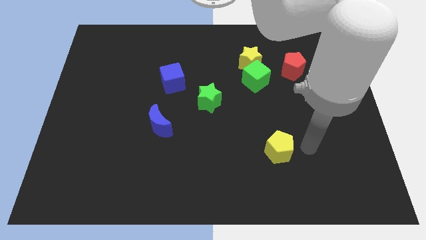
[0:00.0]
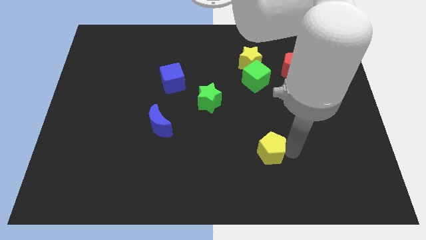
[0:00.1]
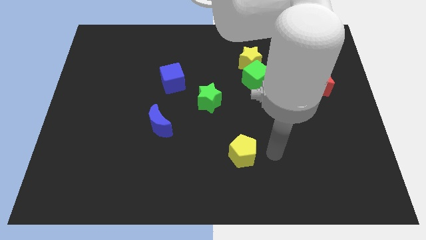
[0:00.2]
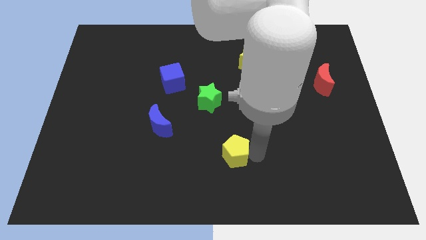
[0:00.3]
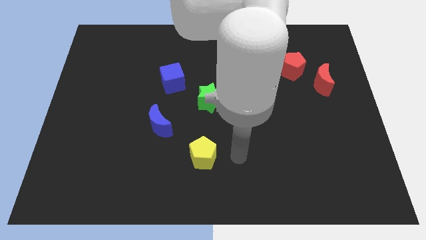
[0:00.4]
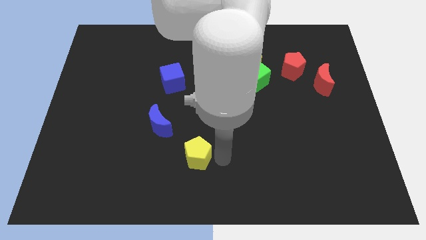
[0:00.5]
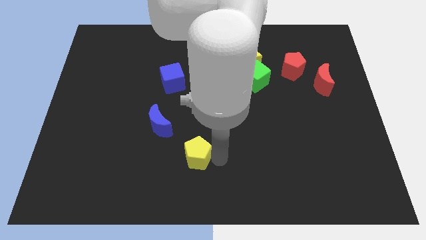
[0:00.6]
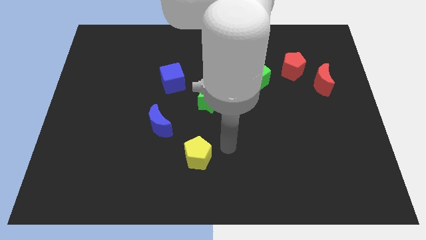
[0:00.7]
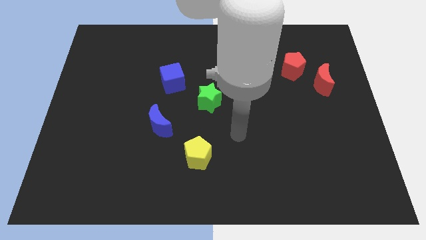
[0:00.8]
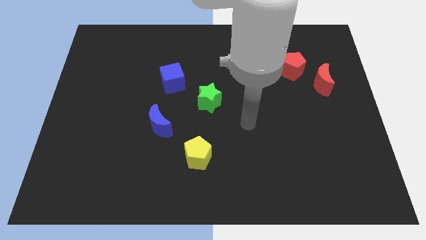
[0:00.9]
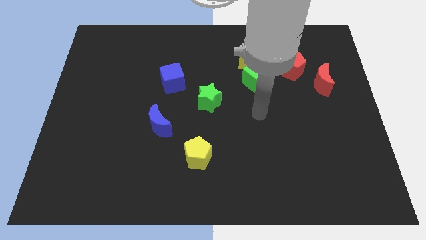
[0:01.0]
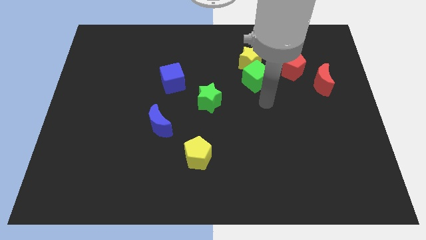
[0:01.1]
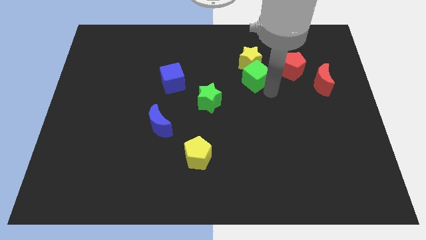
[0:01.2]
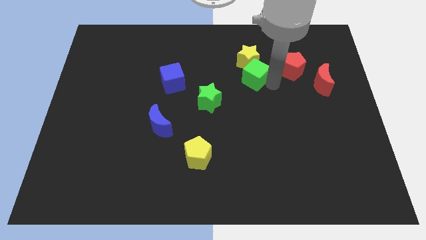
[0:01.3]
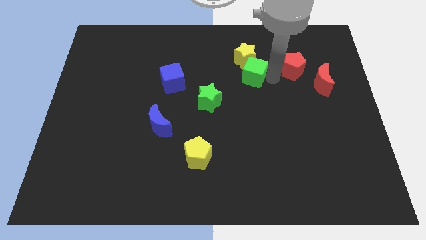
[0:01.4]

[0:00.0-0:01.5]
push the yellow pentagon towards the bottom right to the blue crescent

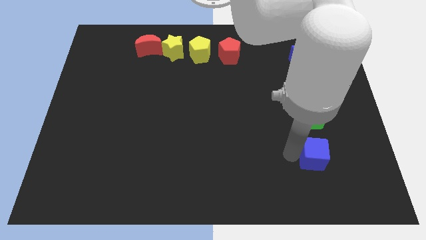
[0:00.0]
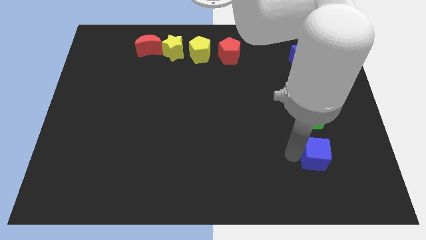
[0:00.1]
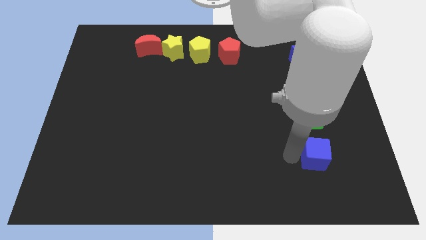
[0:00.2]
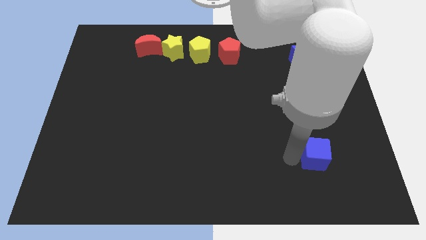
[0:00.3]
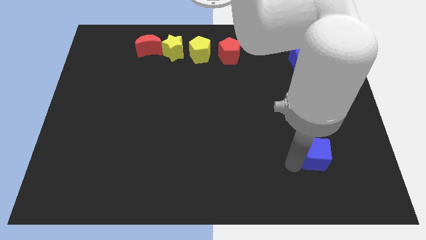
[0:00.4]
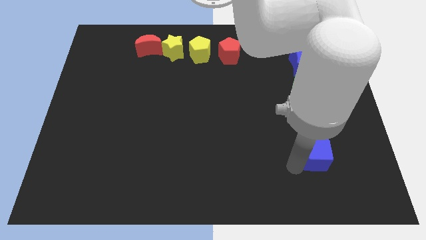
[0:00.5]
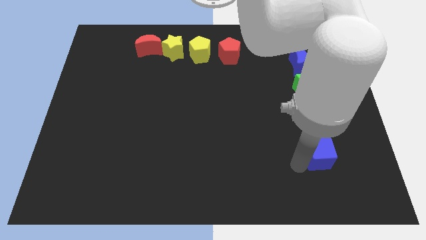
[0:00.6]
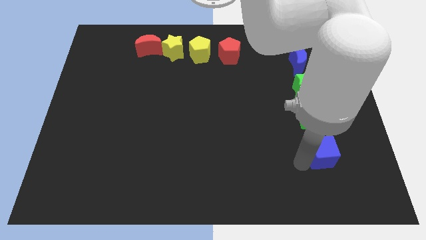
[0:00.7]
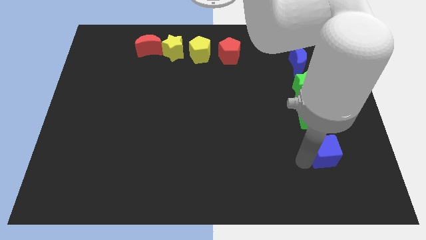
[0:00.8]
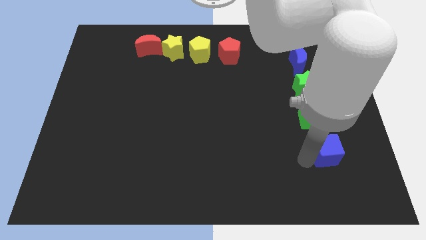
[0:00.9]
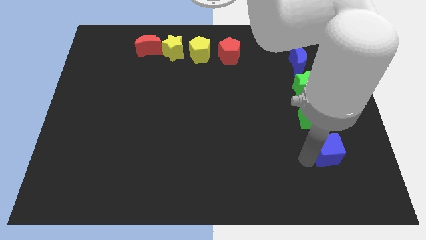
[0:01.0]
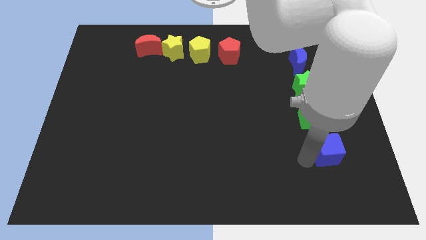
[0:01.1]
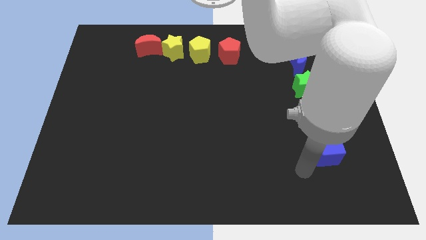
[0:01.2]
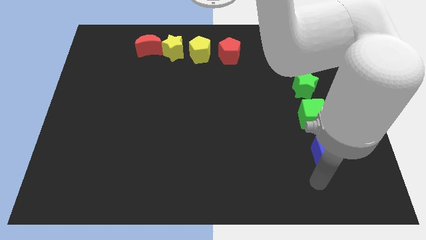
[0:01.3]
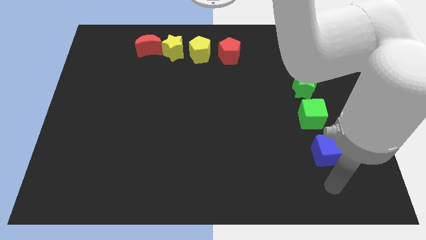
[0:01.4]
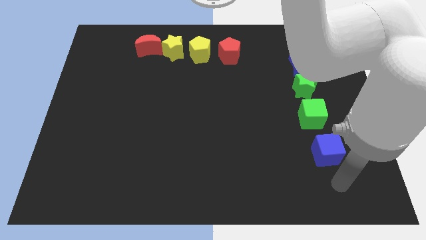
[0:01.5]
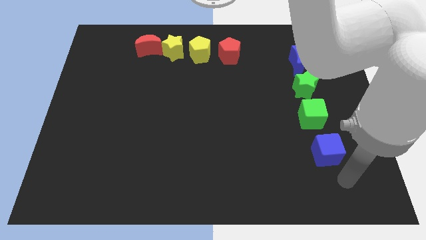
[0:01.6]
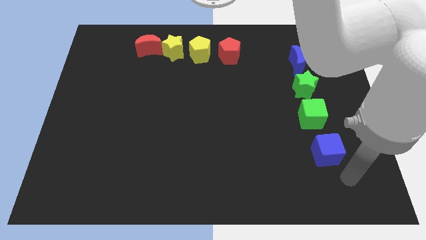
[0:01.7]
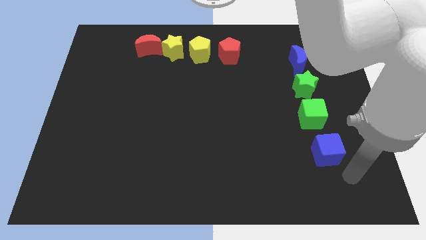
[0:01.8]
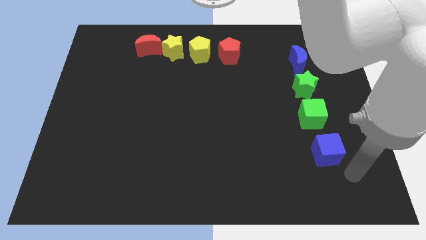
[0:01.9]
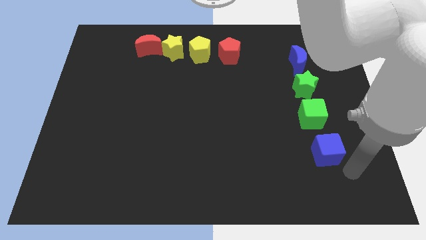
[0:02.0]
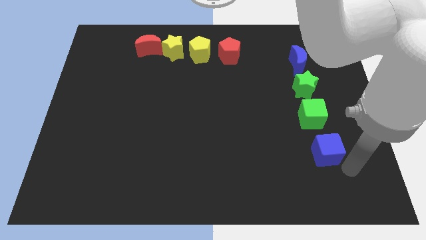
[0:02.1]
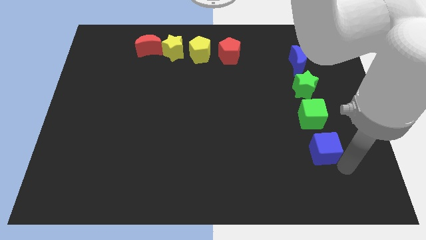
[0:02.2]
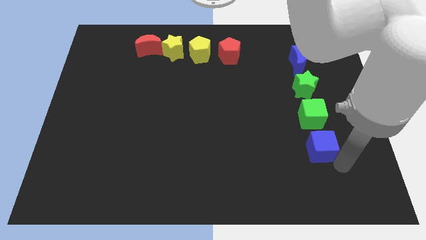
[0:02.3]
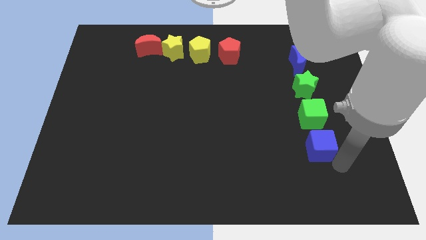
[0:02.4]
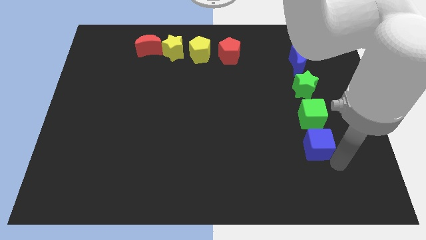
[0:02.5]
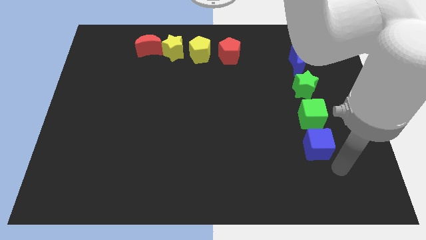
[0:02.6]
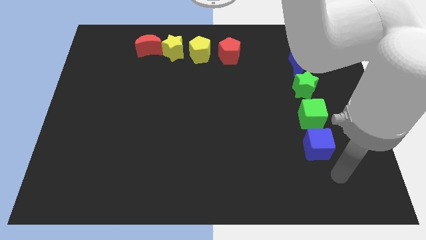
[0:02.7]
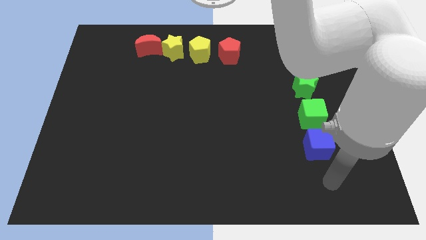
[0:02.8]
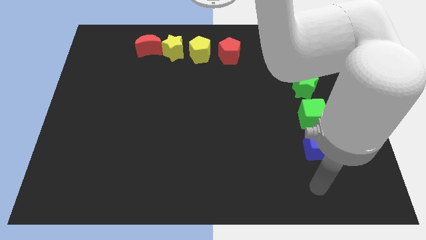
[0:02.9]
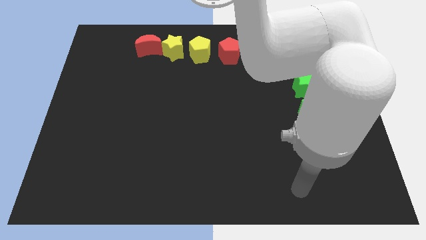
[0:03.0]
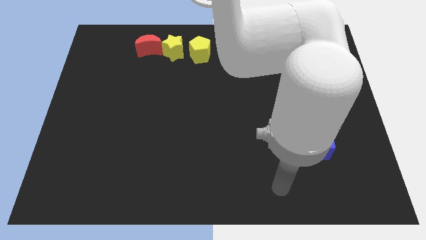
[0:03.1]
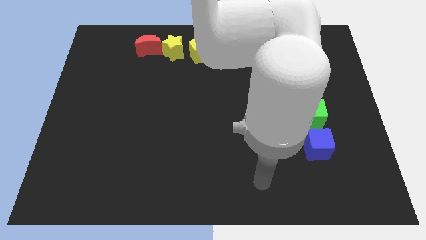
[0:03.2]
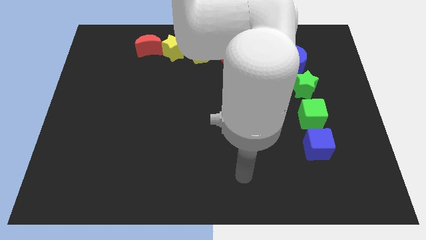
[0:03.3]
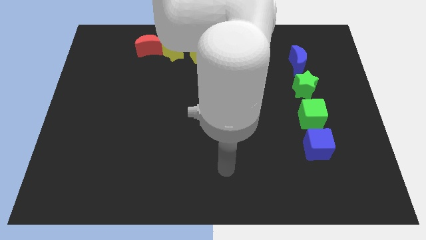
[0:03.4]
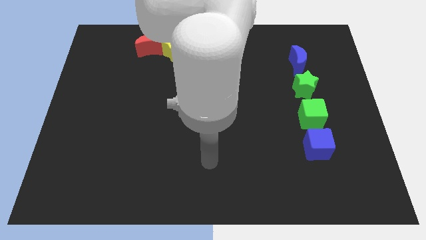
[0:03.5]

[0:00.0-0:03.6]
place the blue cube below the green cube to form a line

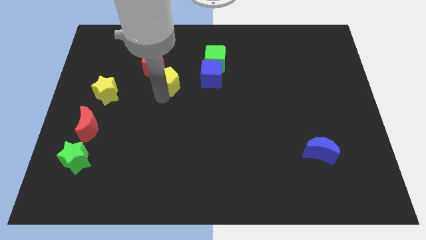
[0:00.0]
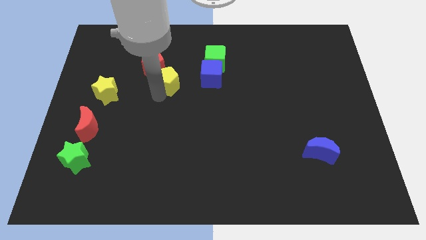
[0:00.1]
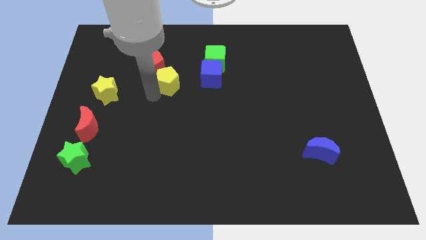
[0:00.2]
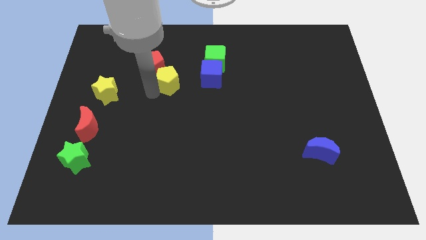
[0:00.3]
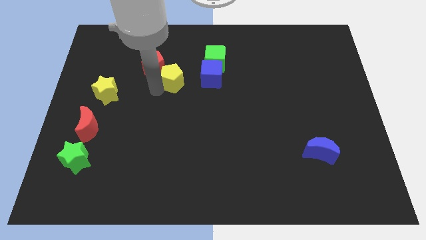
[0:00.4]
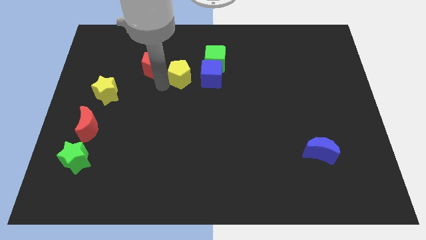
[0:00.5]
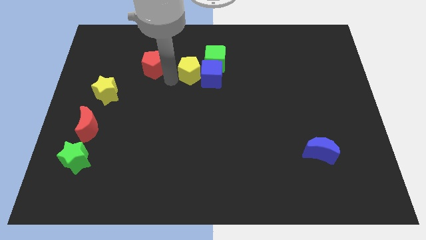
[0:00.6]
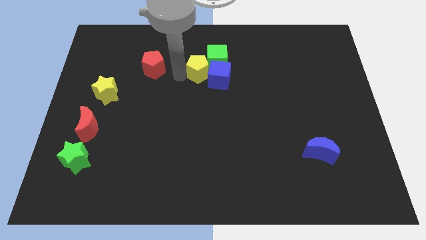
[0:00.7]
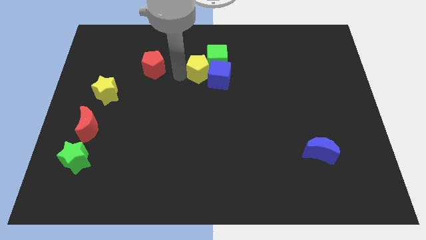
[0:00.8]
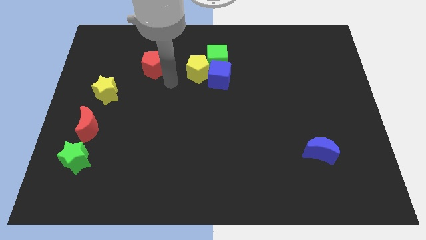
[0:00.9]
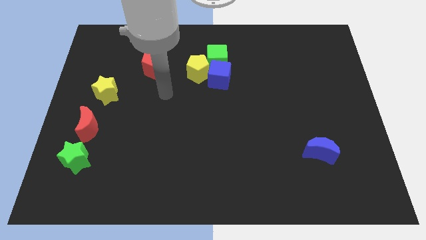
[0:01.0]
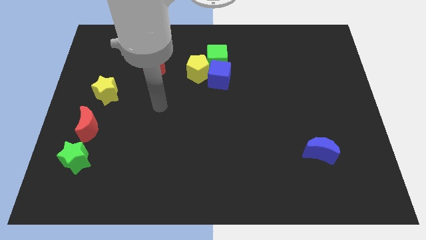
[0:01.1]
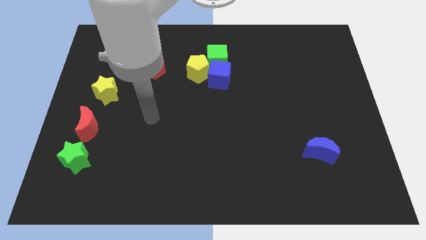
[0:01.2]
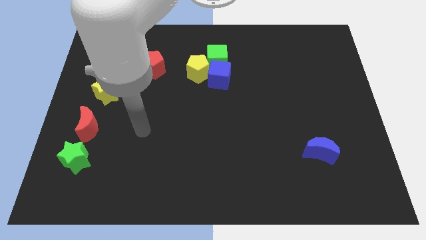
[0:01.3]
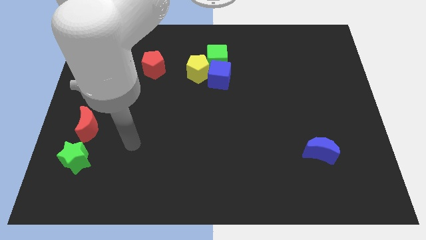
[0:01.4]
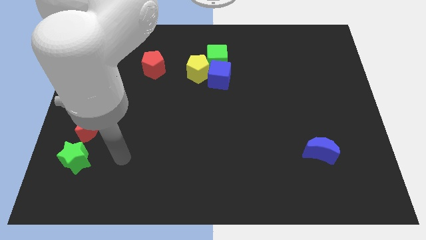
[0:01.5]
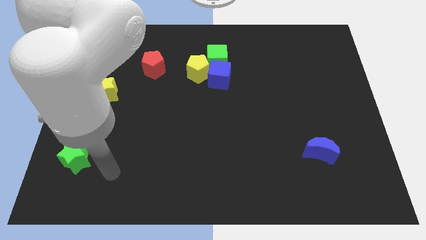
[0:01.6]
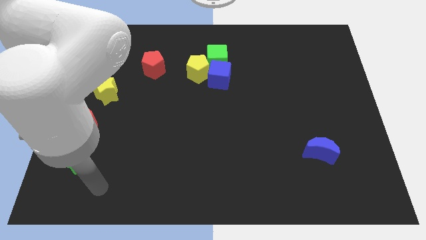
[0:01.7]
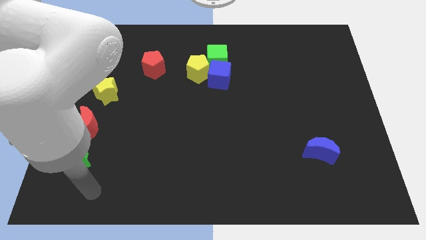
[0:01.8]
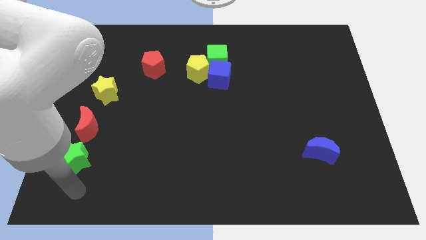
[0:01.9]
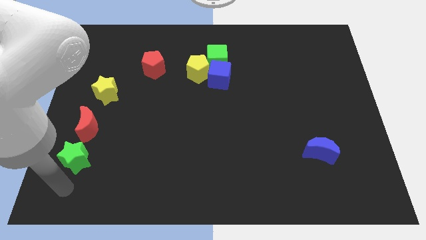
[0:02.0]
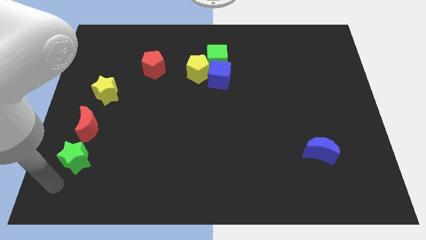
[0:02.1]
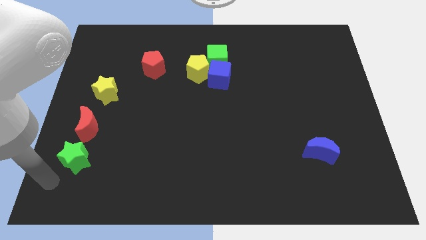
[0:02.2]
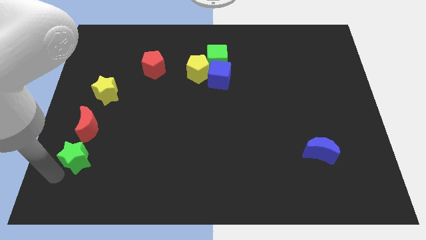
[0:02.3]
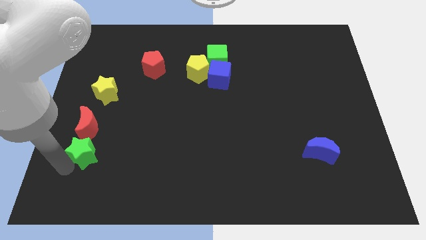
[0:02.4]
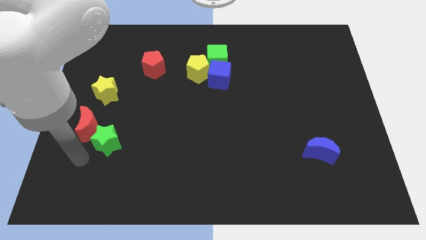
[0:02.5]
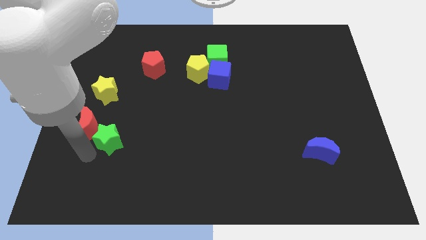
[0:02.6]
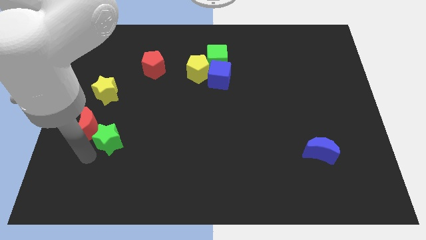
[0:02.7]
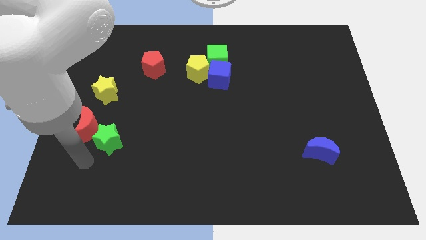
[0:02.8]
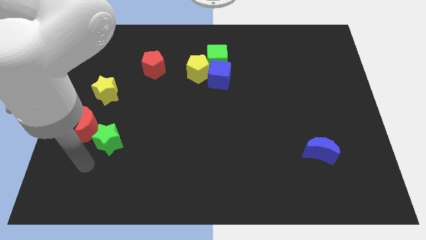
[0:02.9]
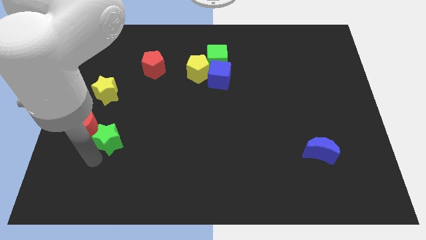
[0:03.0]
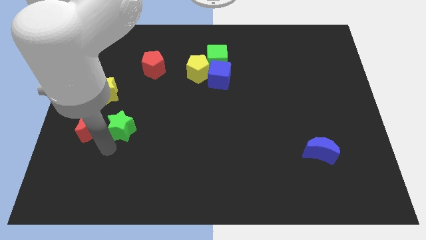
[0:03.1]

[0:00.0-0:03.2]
push the green star to the right of the red moon

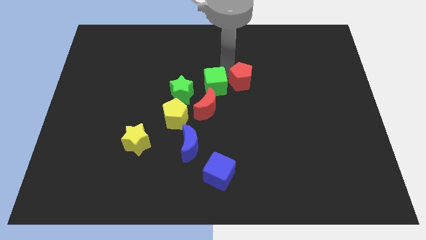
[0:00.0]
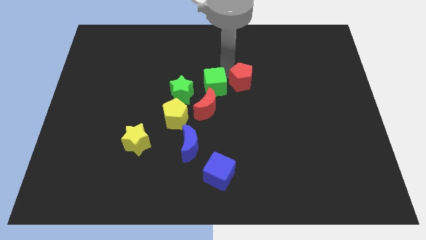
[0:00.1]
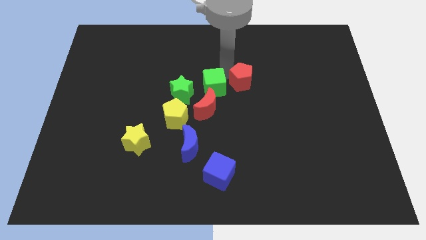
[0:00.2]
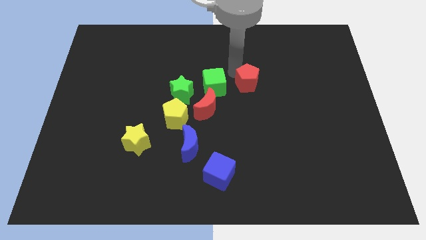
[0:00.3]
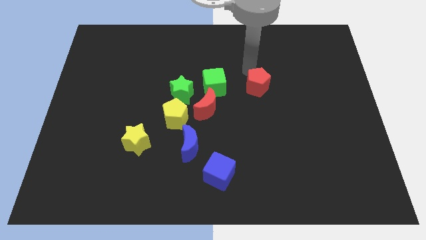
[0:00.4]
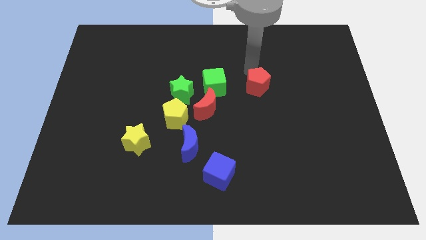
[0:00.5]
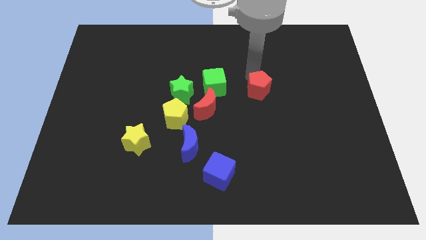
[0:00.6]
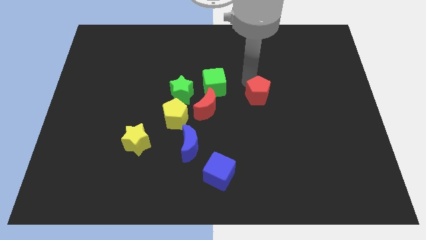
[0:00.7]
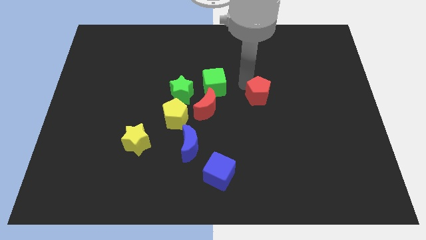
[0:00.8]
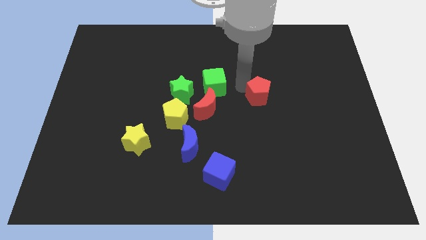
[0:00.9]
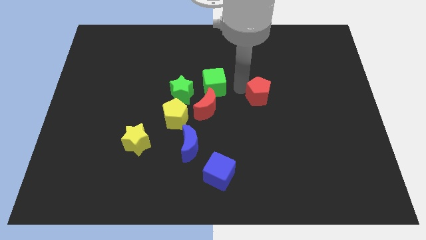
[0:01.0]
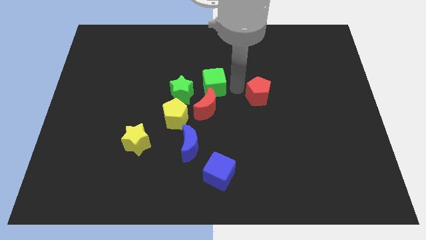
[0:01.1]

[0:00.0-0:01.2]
move the red pentagon away from the right side of the green cube
